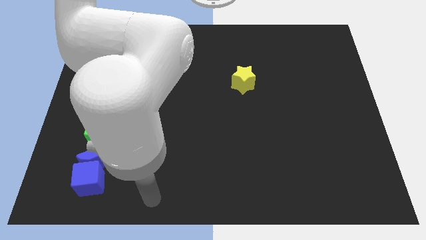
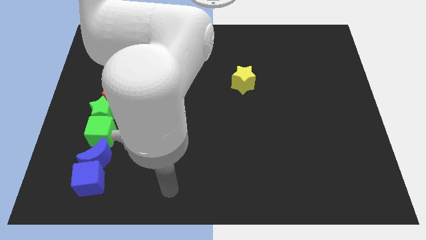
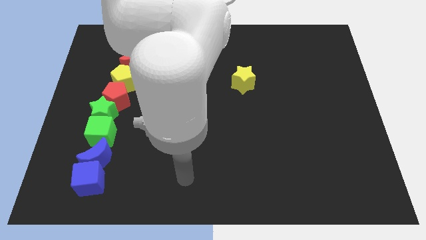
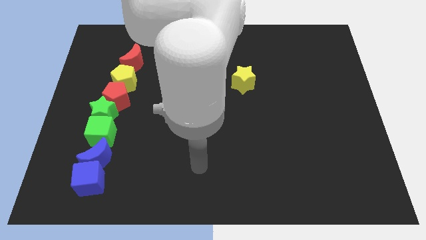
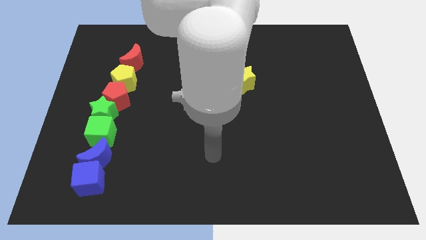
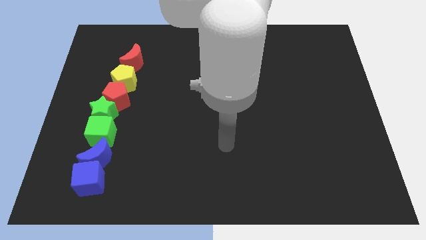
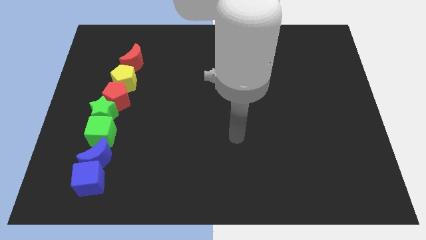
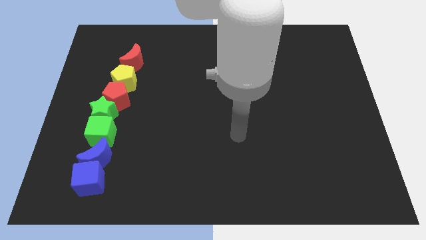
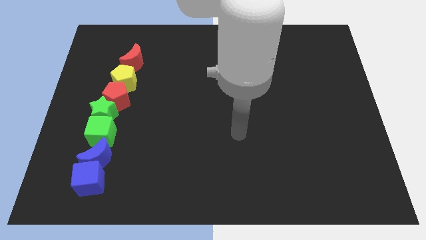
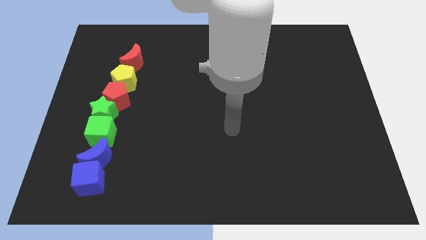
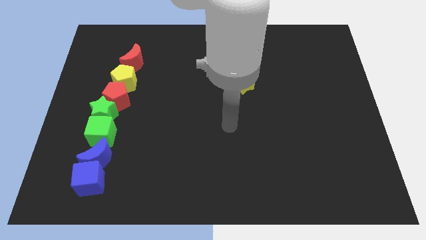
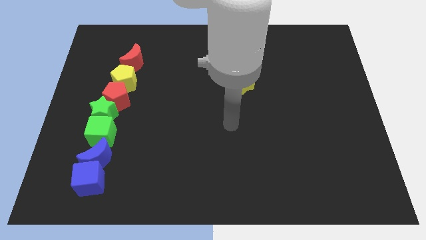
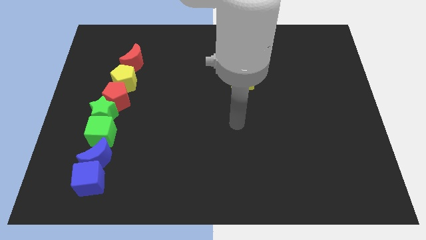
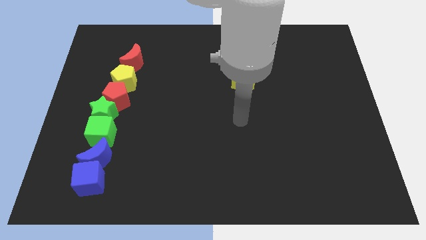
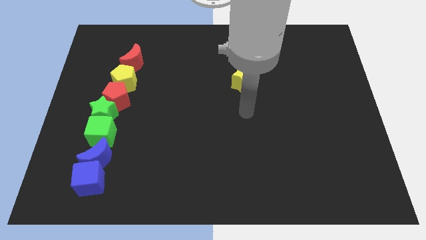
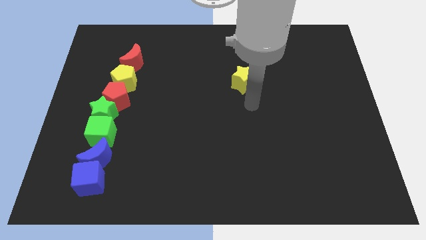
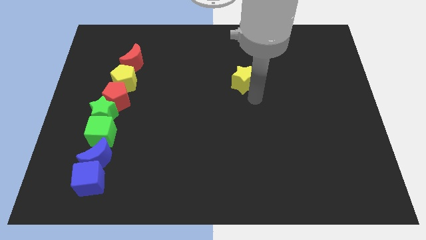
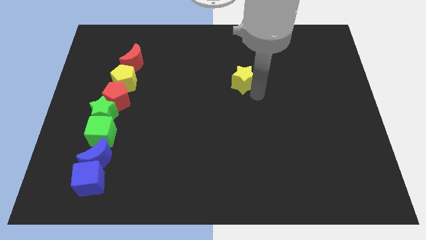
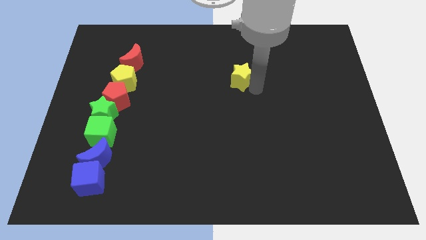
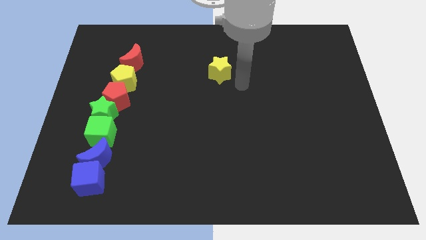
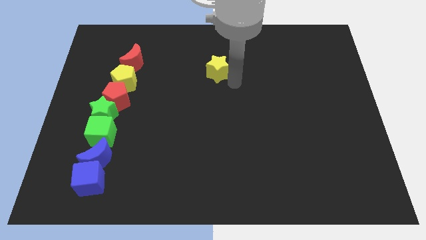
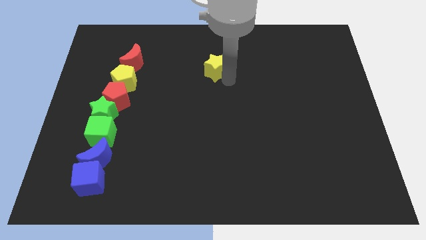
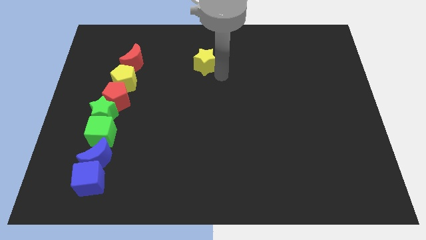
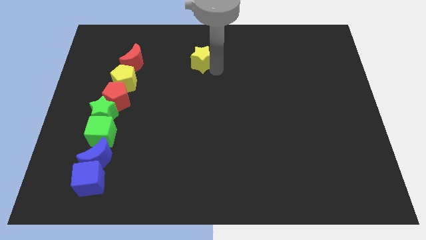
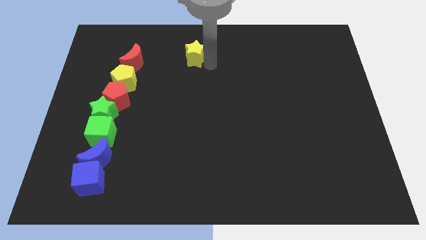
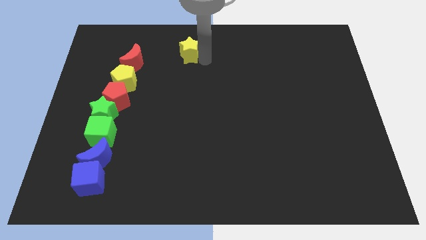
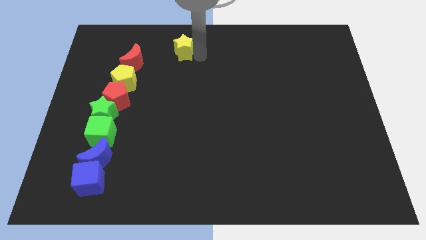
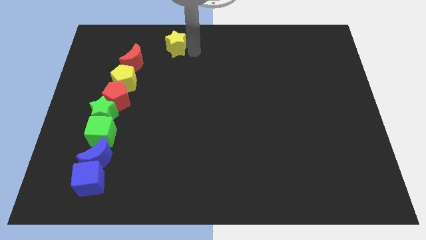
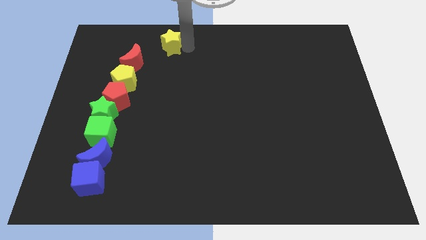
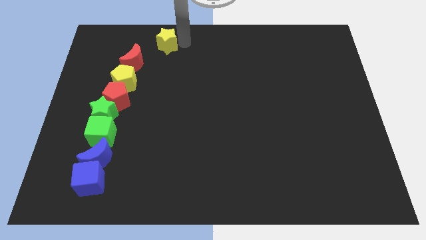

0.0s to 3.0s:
place the yellow star at the top right side of the red moon

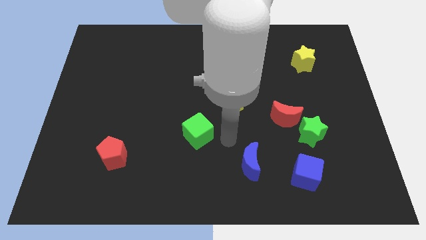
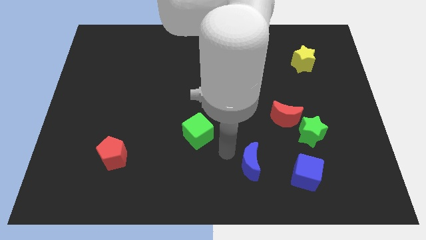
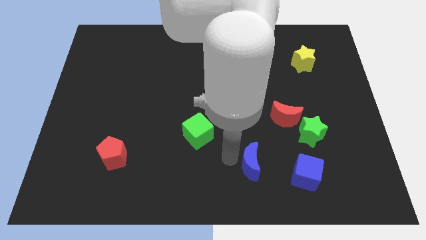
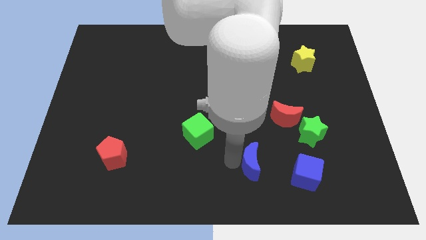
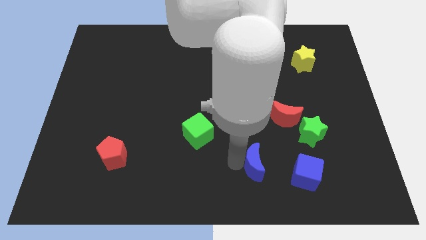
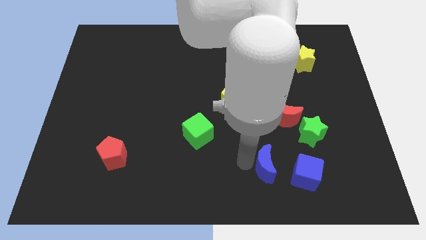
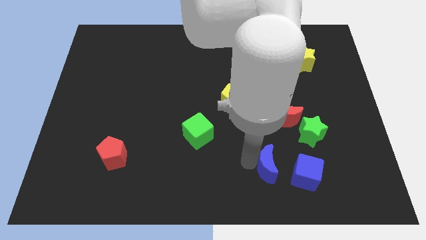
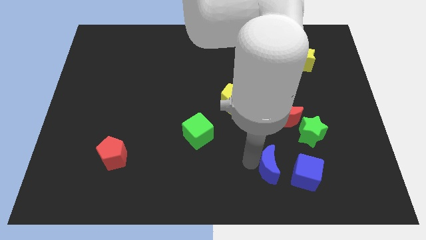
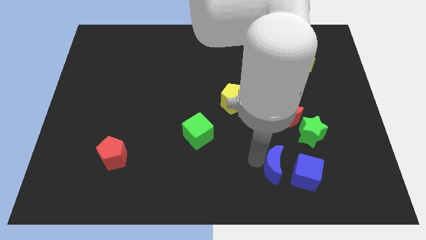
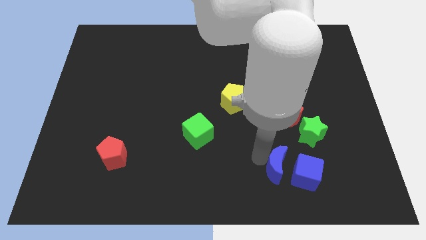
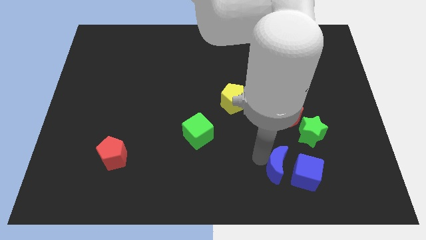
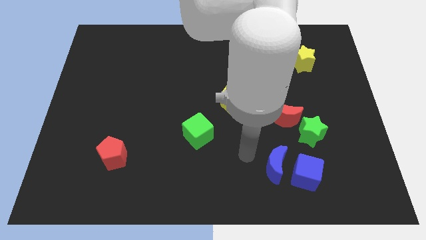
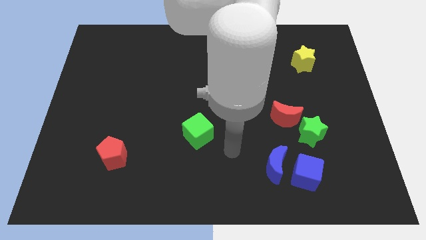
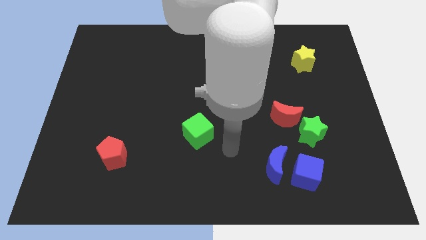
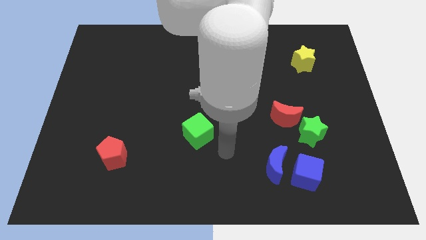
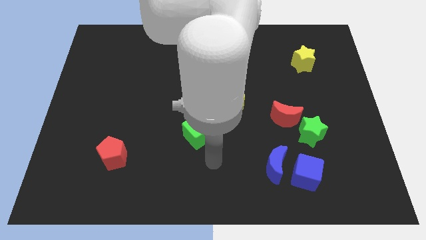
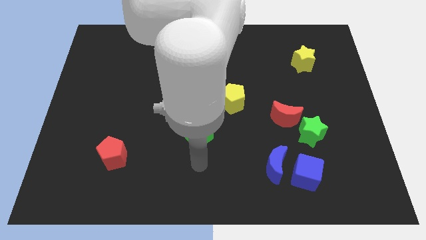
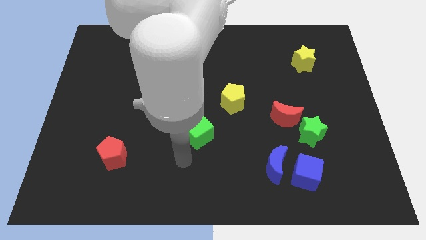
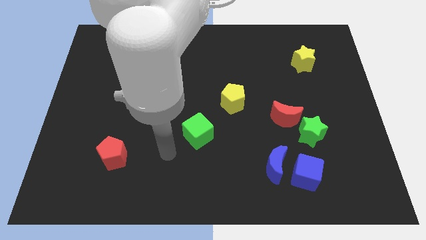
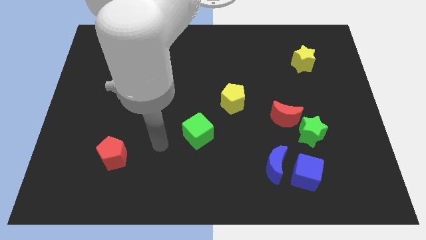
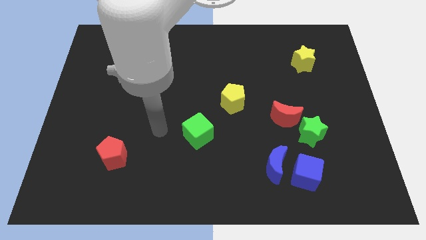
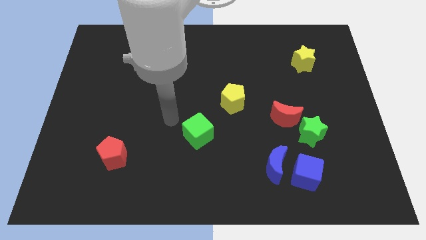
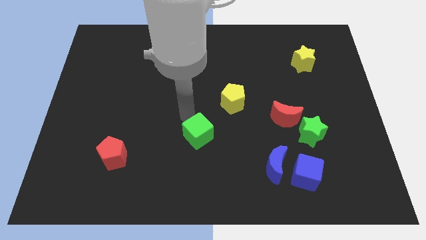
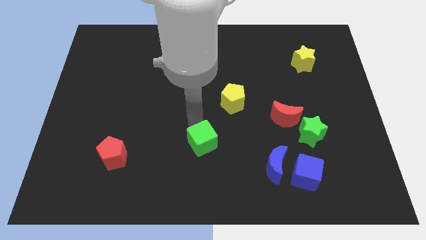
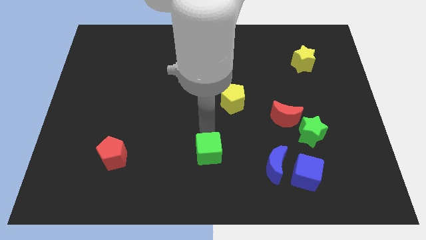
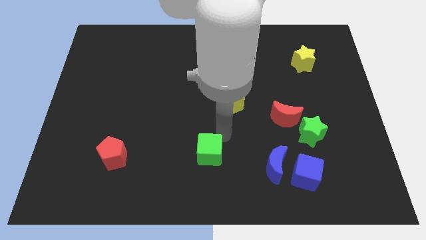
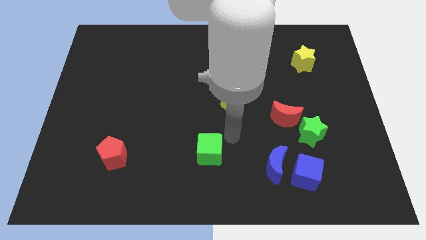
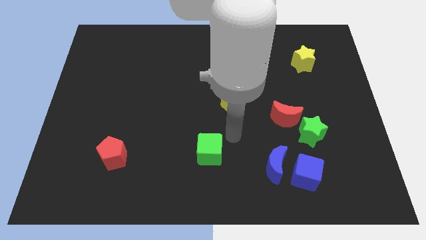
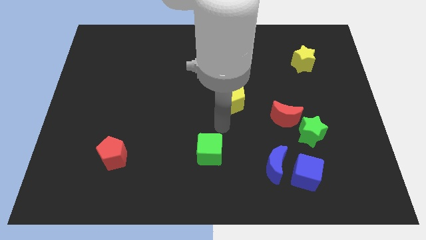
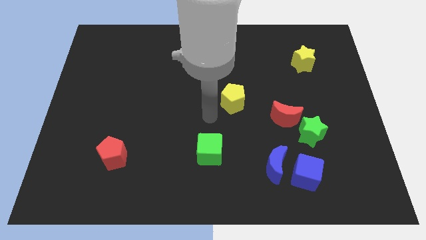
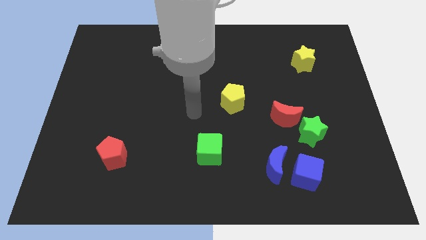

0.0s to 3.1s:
move blue moon close to blue cube

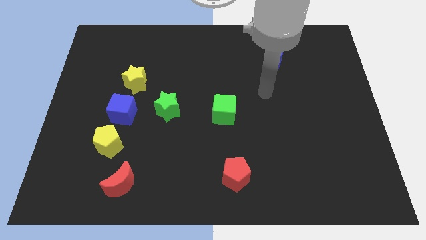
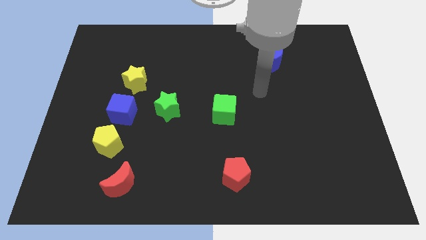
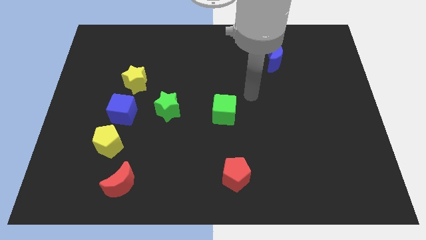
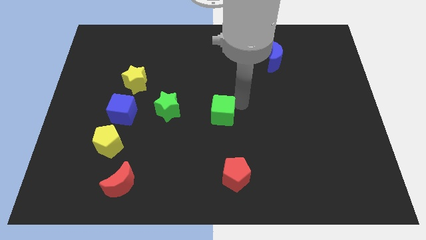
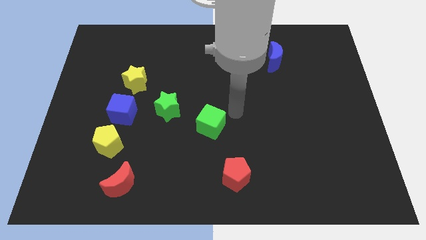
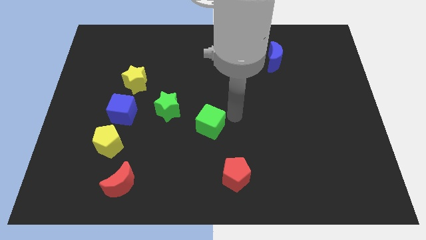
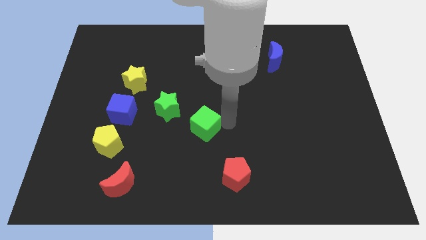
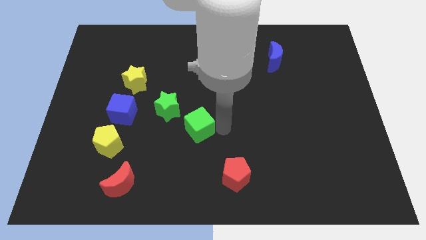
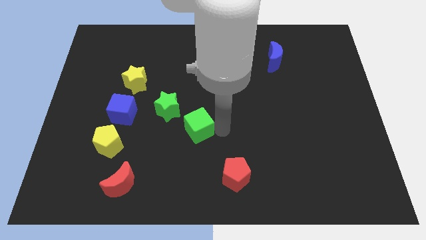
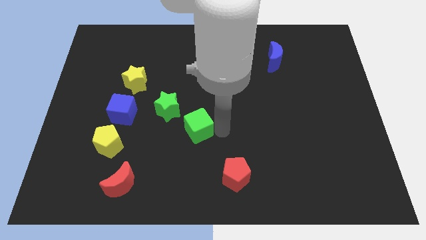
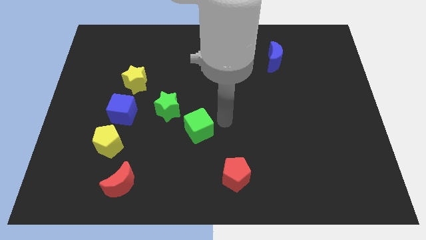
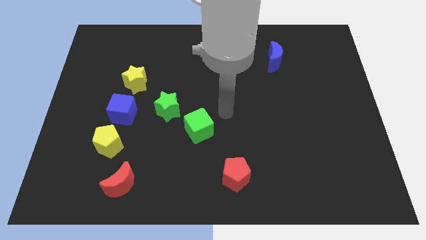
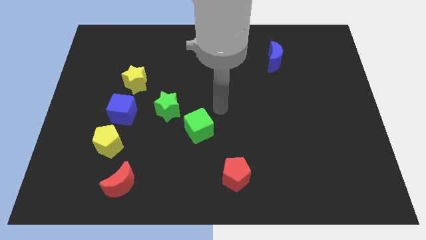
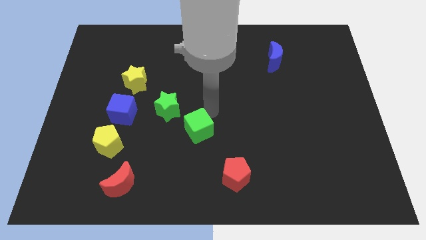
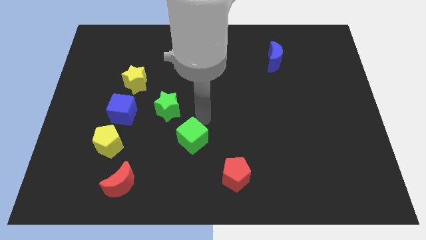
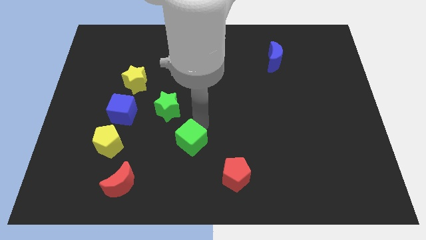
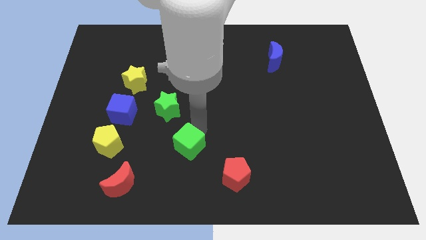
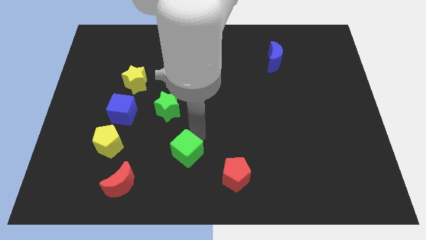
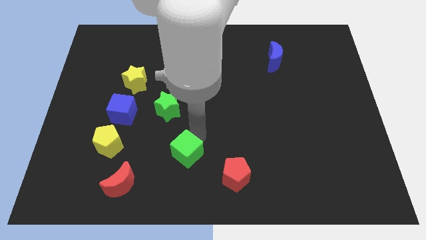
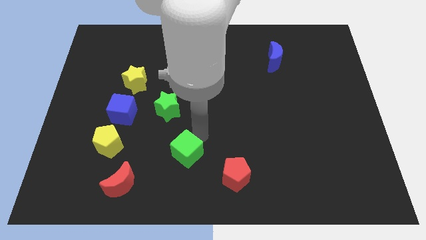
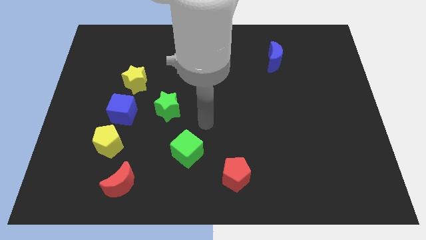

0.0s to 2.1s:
push the green cube to the horizontal right of the yellow pentagon

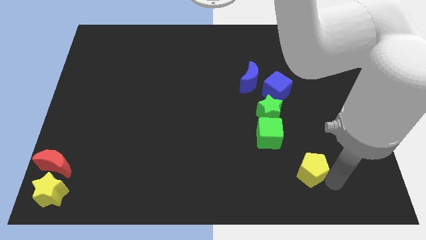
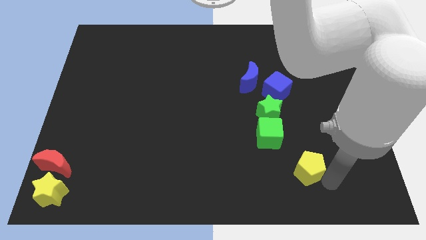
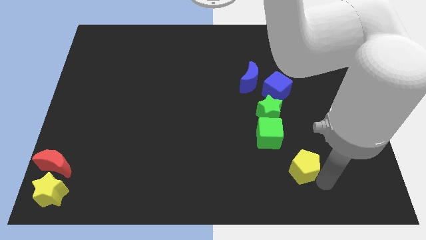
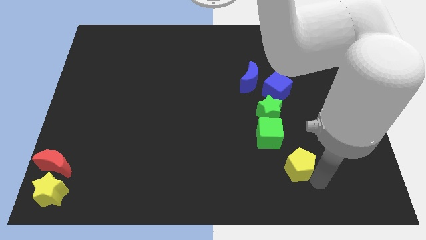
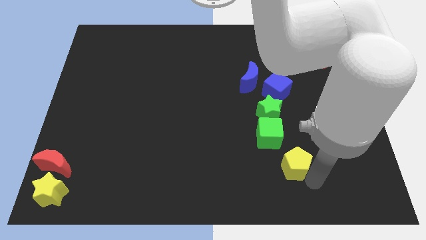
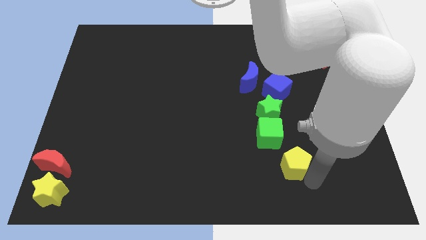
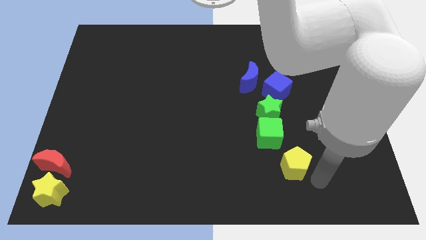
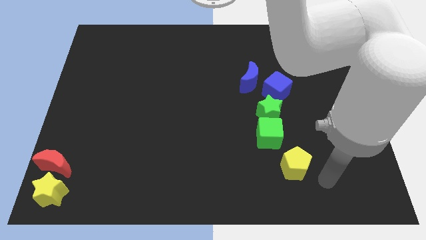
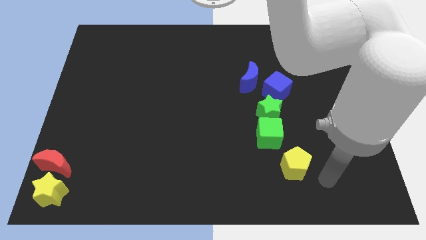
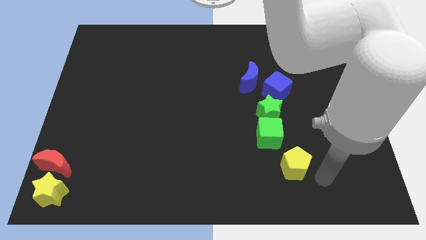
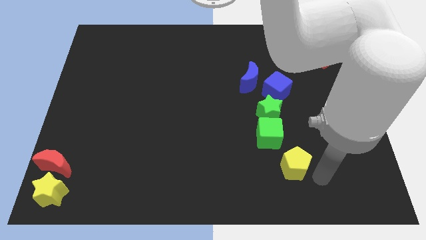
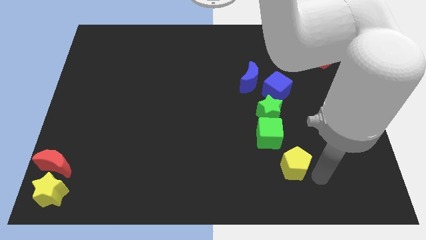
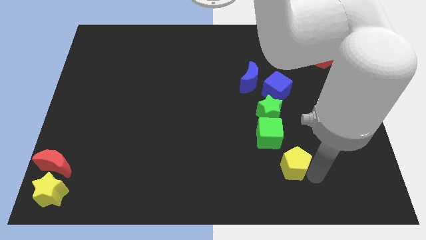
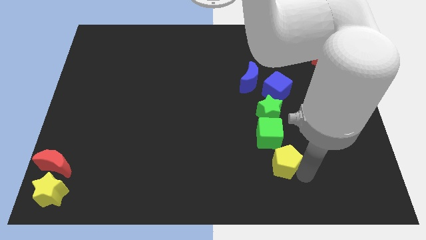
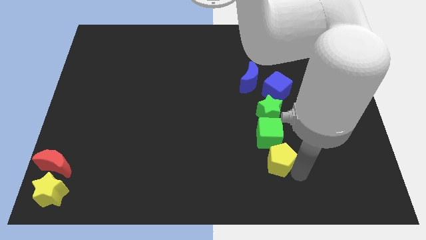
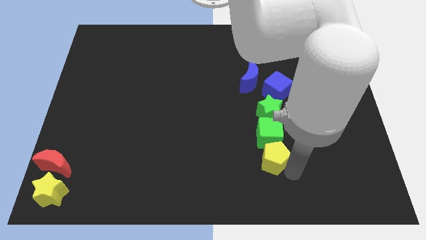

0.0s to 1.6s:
push yellow star below green cube
